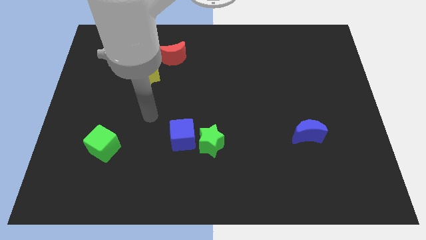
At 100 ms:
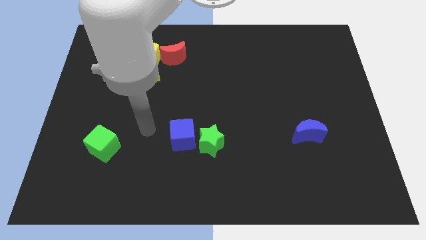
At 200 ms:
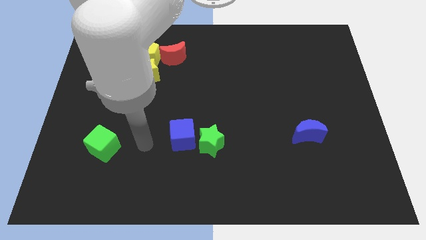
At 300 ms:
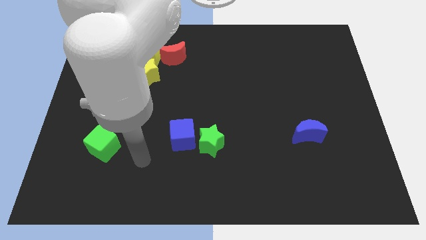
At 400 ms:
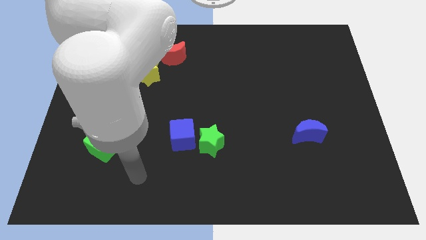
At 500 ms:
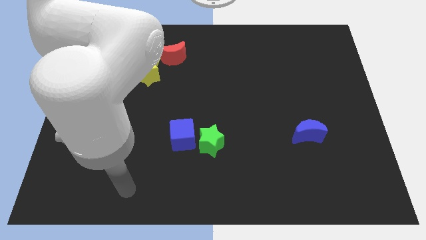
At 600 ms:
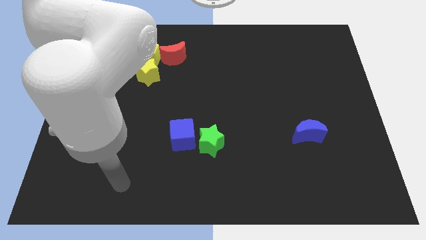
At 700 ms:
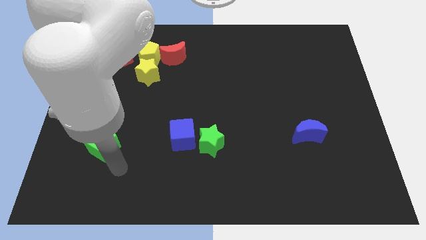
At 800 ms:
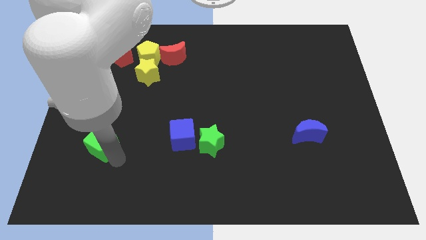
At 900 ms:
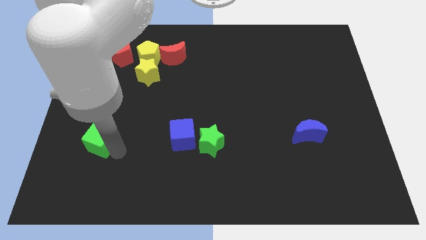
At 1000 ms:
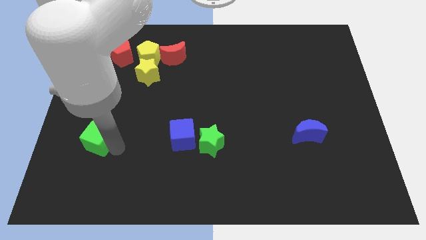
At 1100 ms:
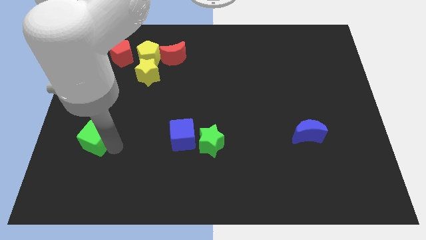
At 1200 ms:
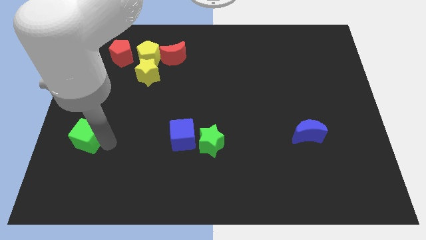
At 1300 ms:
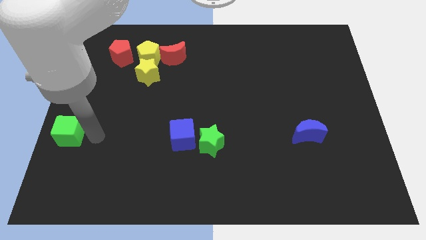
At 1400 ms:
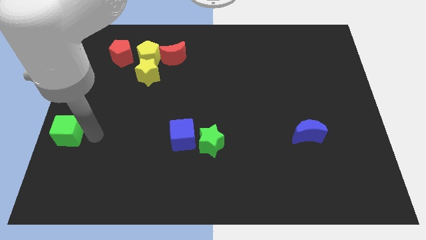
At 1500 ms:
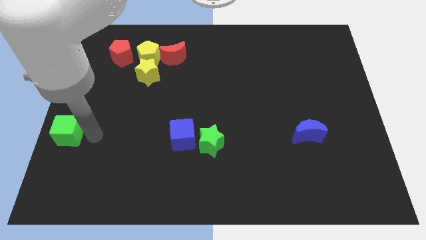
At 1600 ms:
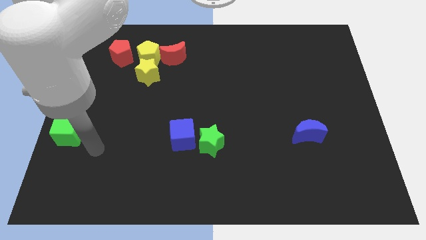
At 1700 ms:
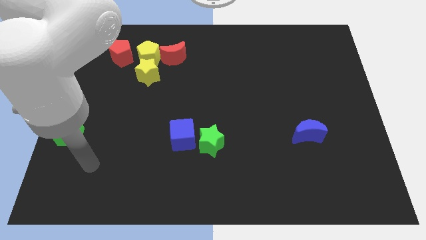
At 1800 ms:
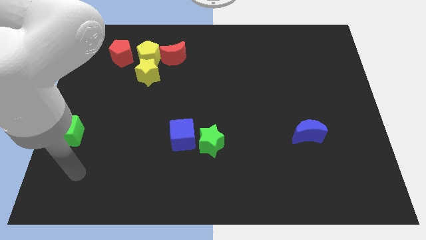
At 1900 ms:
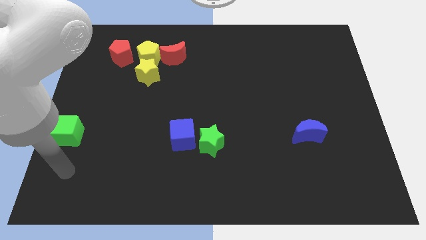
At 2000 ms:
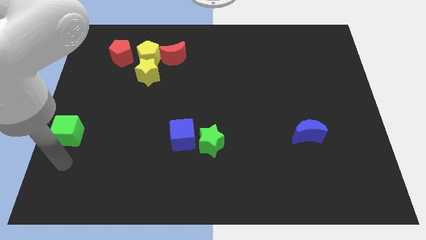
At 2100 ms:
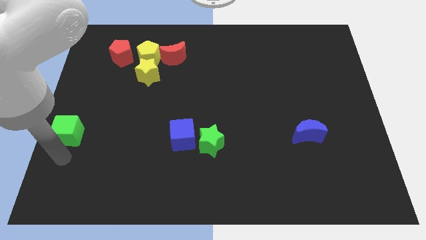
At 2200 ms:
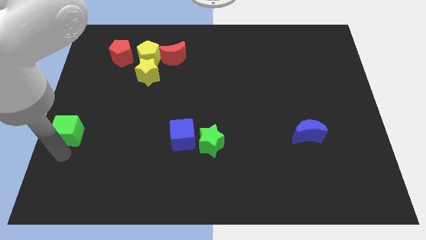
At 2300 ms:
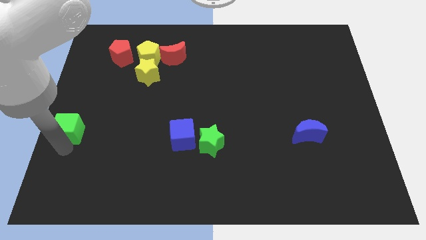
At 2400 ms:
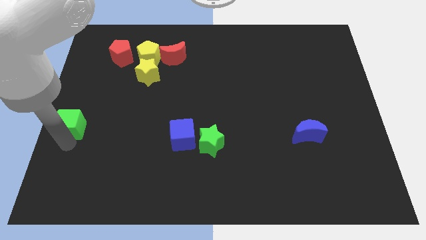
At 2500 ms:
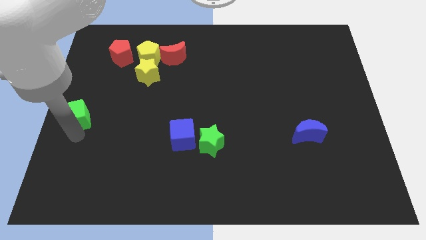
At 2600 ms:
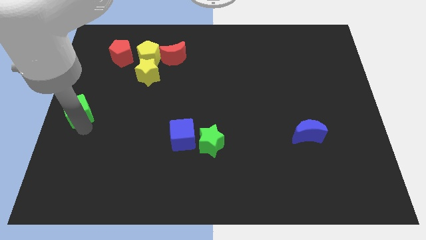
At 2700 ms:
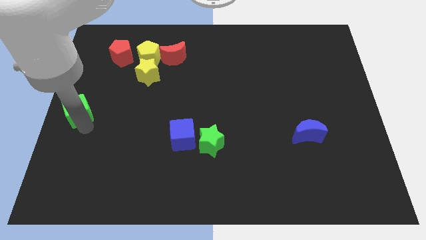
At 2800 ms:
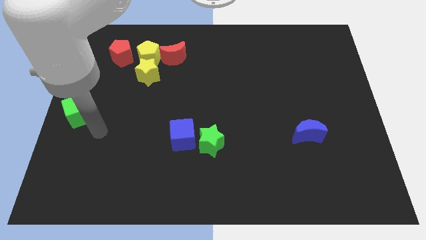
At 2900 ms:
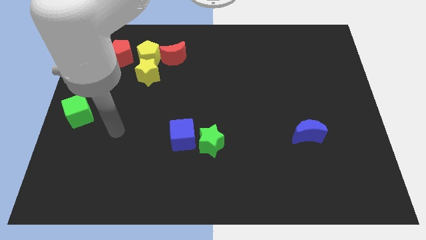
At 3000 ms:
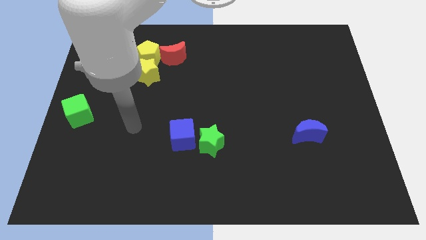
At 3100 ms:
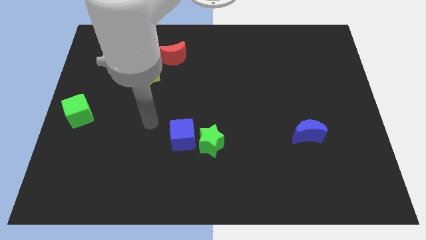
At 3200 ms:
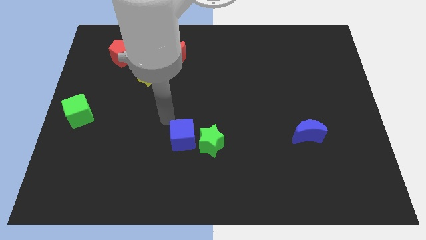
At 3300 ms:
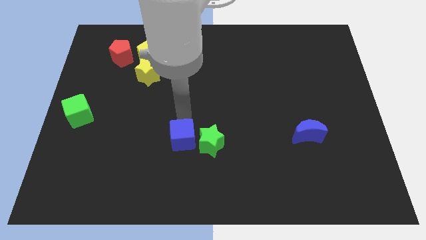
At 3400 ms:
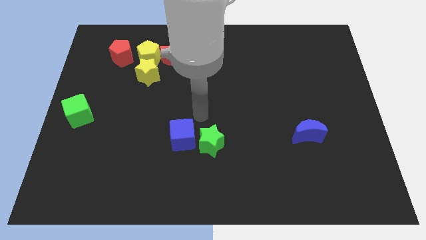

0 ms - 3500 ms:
place the green cube diagonally to the bottom left of the yellow star

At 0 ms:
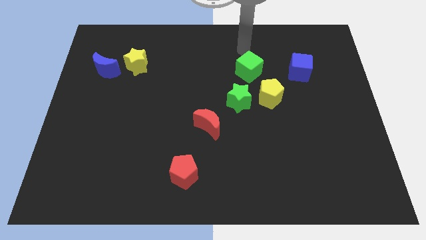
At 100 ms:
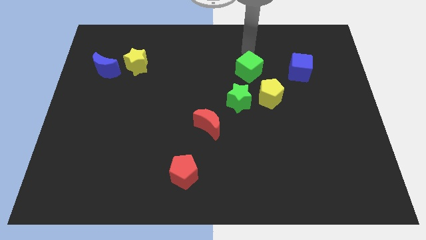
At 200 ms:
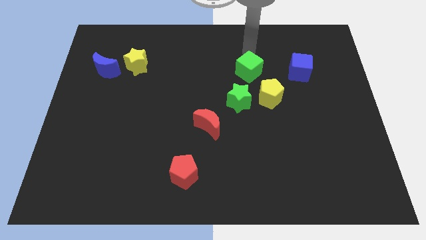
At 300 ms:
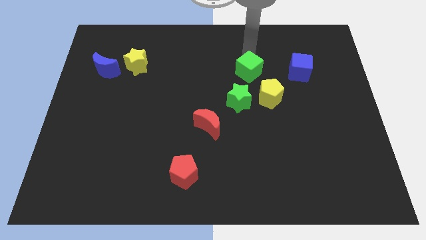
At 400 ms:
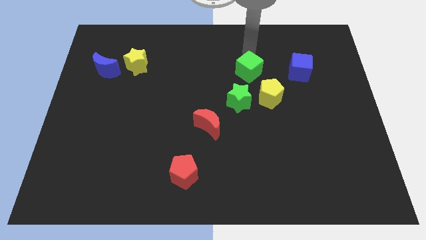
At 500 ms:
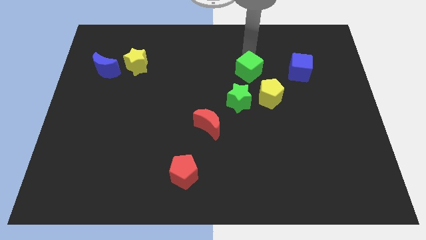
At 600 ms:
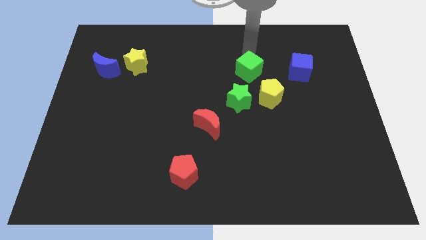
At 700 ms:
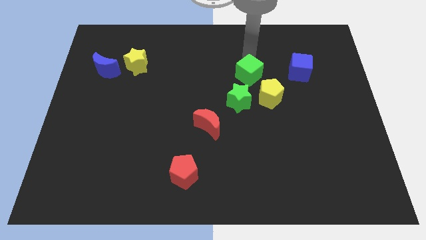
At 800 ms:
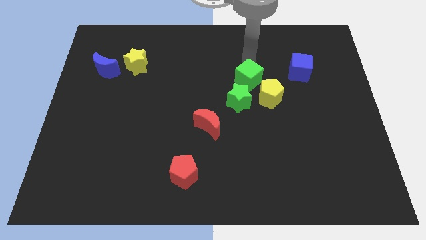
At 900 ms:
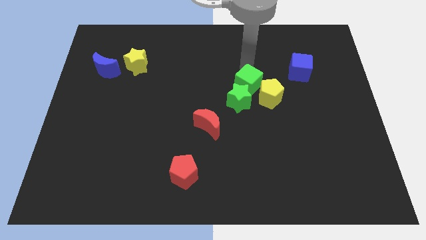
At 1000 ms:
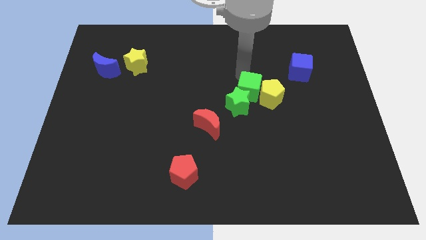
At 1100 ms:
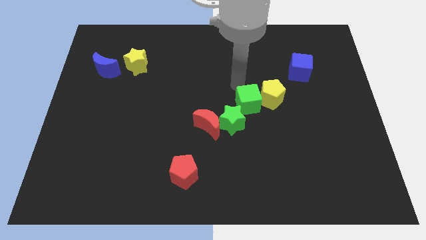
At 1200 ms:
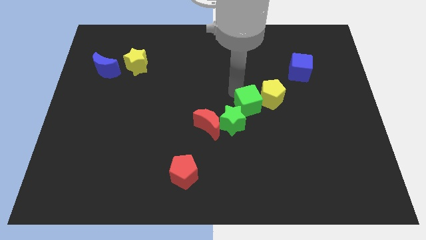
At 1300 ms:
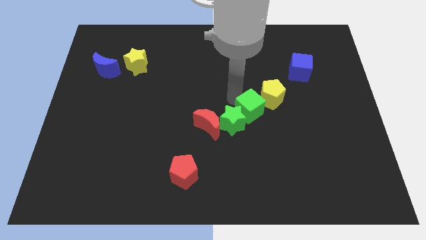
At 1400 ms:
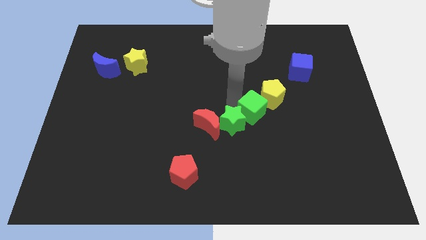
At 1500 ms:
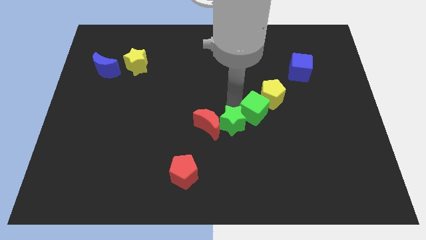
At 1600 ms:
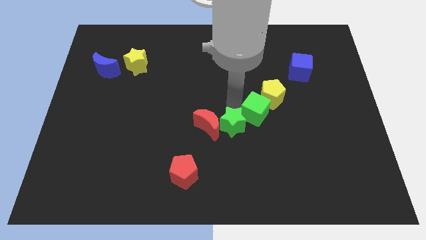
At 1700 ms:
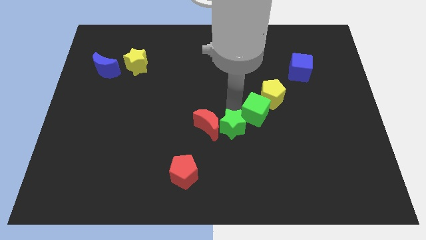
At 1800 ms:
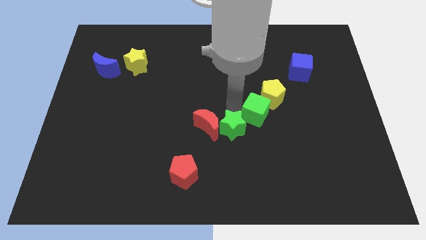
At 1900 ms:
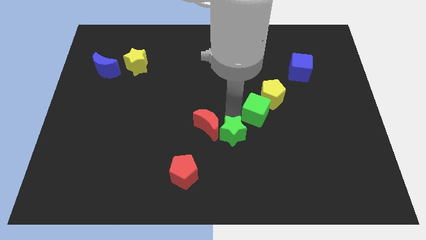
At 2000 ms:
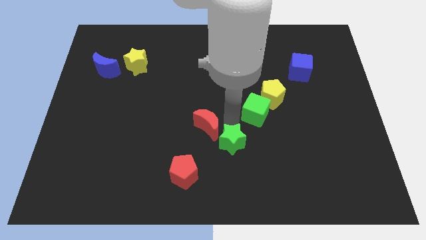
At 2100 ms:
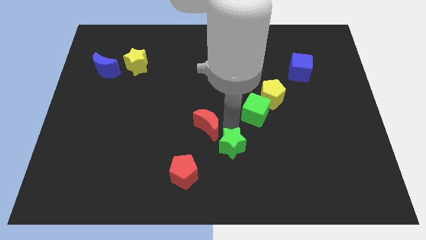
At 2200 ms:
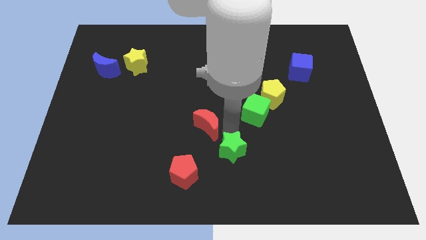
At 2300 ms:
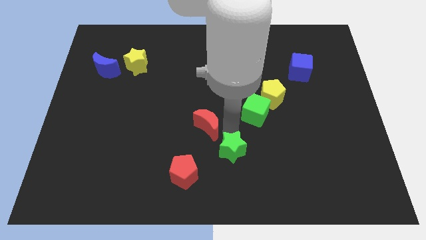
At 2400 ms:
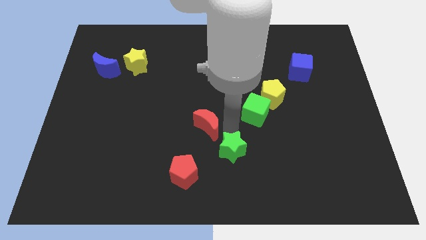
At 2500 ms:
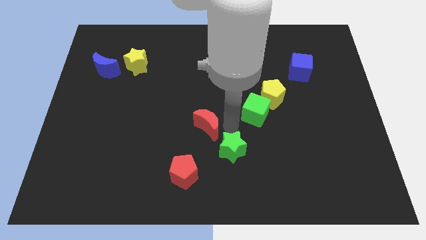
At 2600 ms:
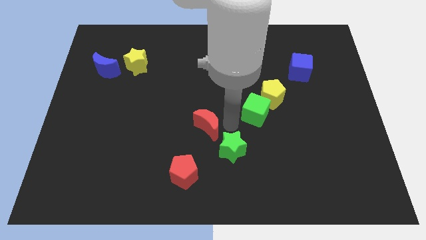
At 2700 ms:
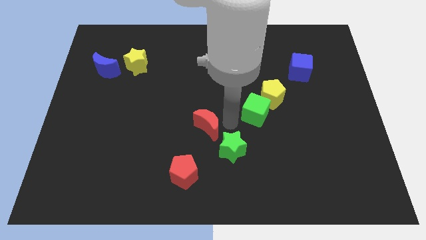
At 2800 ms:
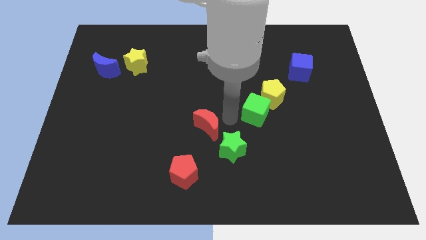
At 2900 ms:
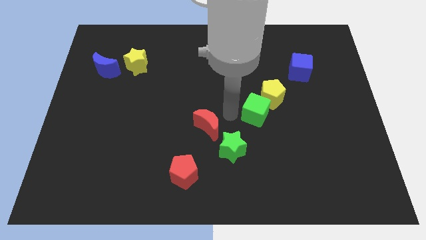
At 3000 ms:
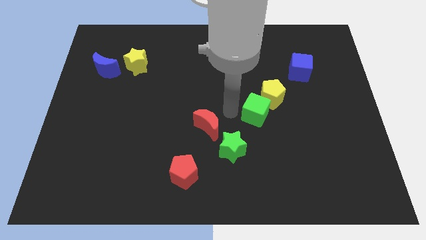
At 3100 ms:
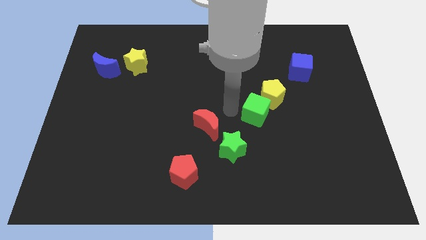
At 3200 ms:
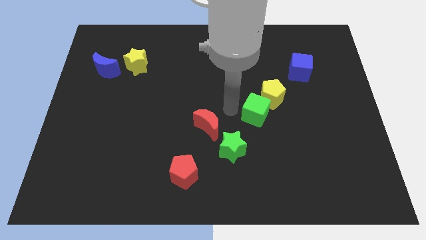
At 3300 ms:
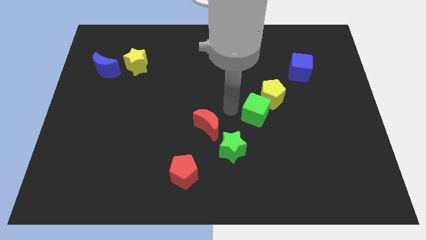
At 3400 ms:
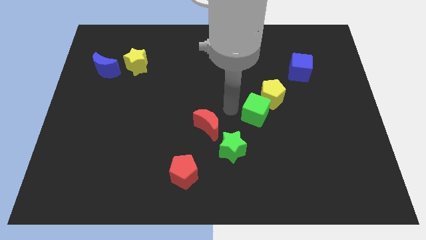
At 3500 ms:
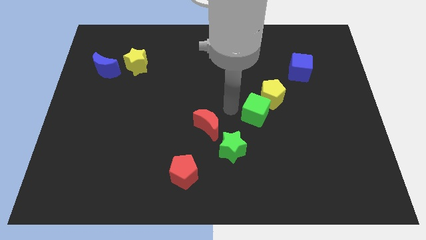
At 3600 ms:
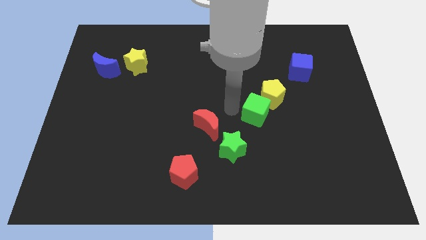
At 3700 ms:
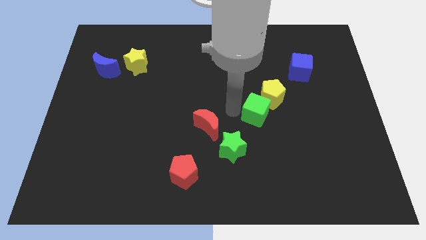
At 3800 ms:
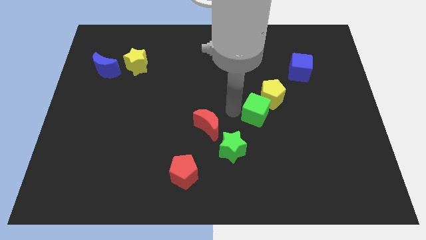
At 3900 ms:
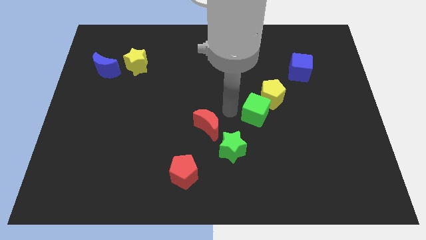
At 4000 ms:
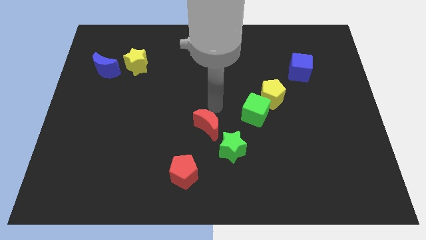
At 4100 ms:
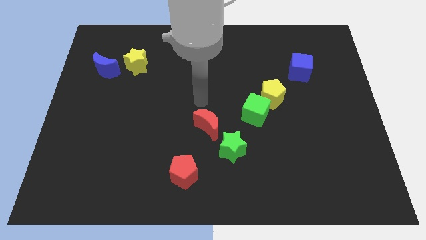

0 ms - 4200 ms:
push green star to the bottom of the table

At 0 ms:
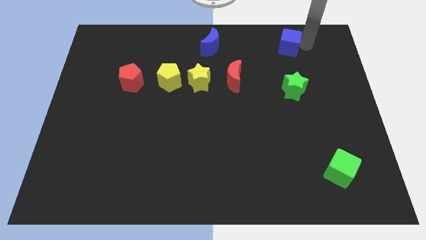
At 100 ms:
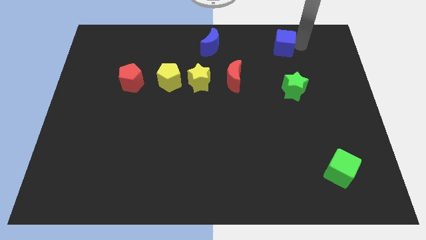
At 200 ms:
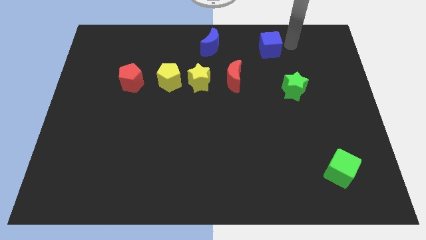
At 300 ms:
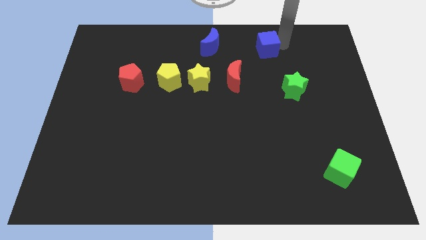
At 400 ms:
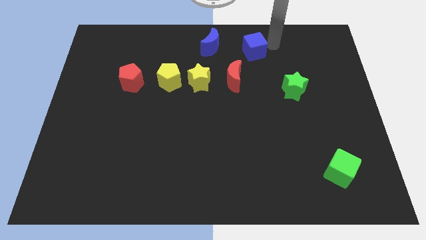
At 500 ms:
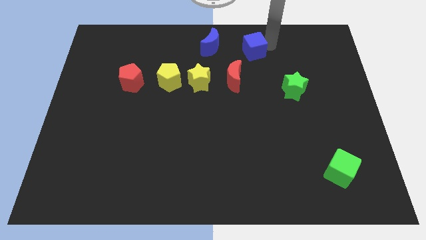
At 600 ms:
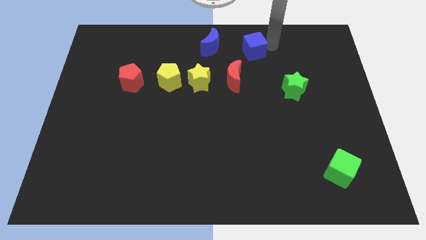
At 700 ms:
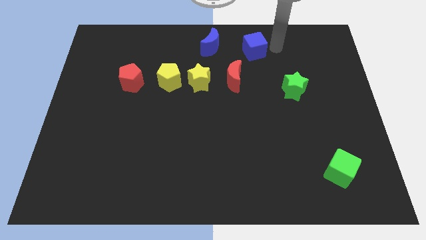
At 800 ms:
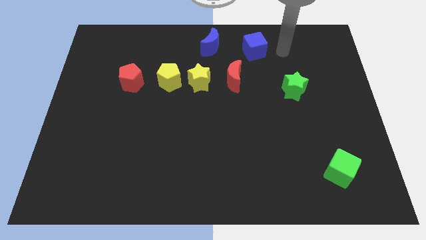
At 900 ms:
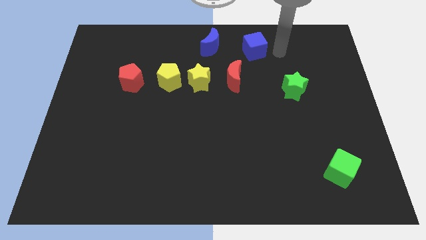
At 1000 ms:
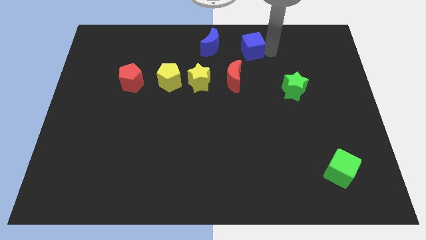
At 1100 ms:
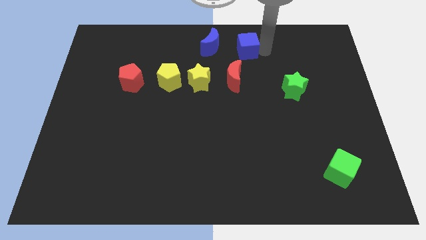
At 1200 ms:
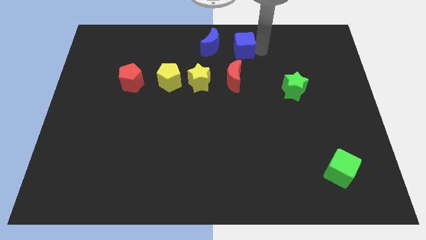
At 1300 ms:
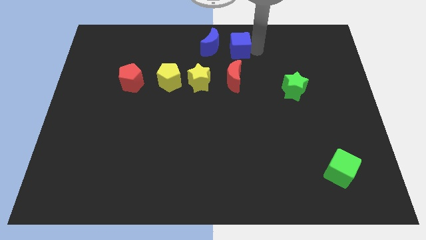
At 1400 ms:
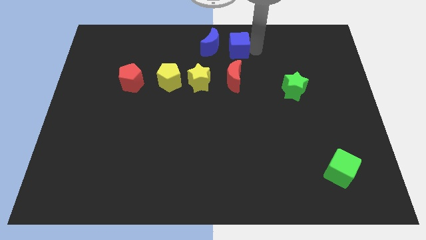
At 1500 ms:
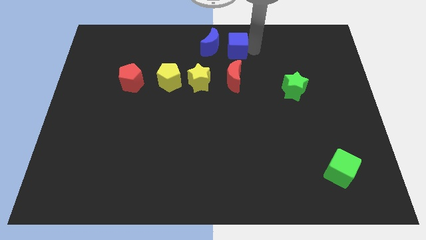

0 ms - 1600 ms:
put the blue cube above the red crescent
